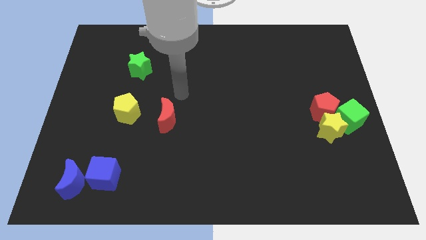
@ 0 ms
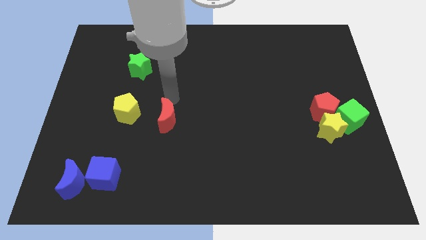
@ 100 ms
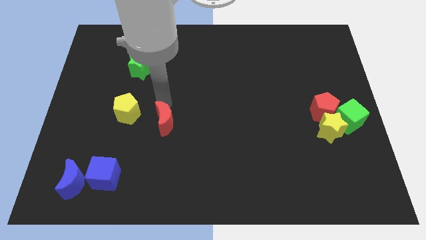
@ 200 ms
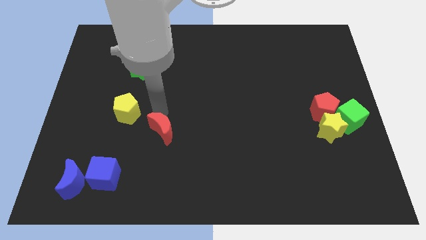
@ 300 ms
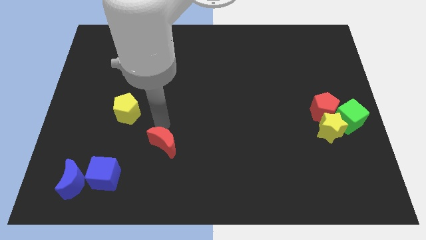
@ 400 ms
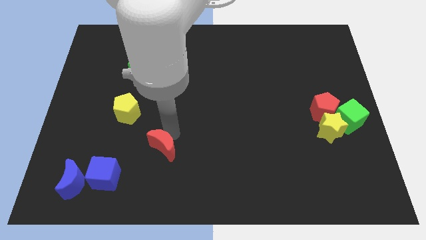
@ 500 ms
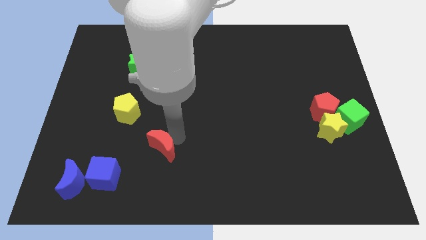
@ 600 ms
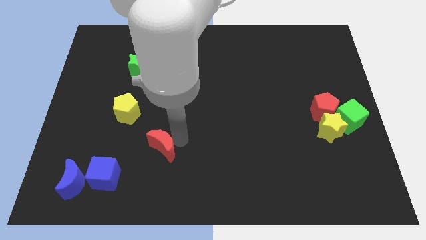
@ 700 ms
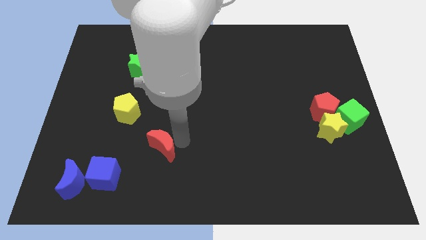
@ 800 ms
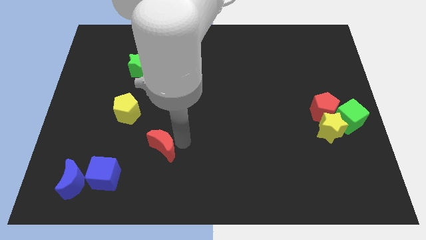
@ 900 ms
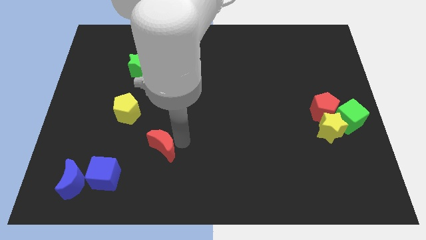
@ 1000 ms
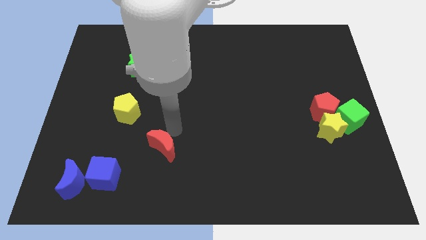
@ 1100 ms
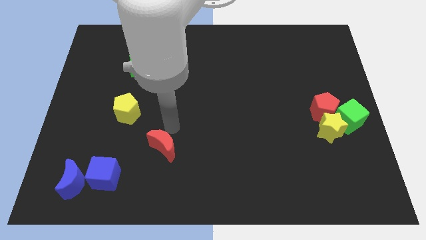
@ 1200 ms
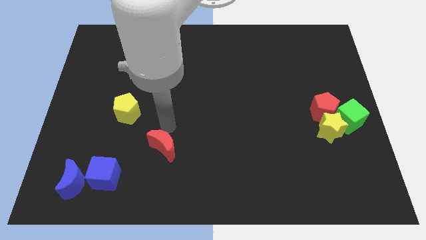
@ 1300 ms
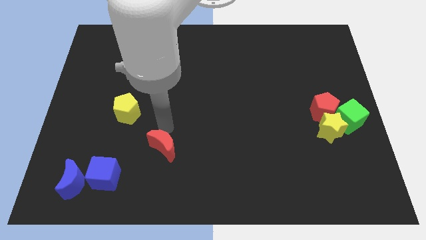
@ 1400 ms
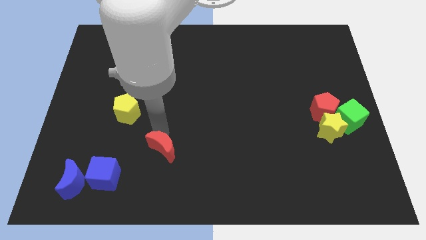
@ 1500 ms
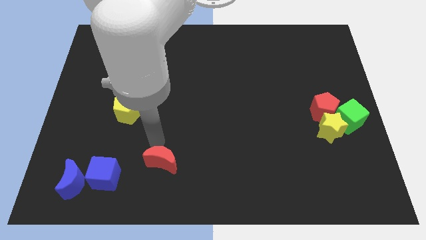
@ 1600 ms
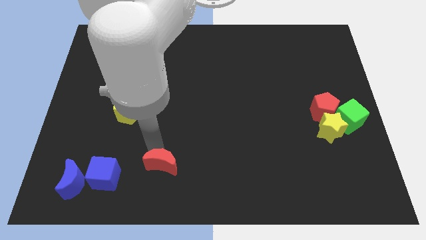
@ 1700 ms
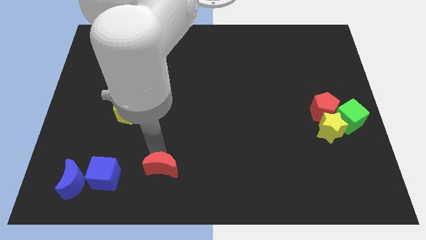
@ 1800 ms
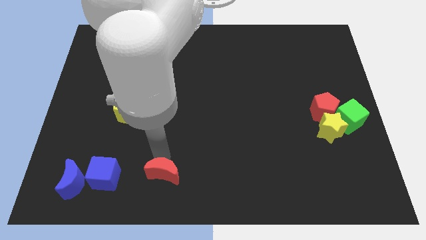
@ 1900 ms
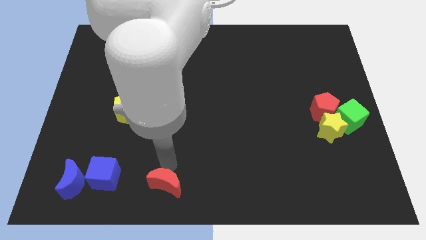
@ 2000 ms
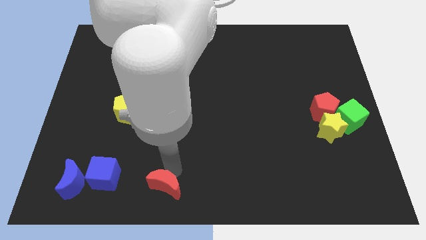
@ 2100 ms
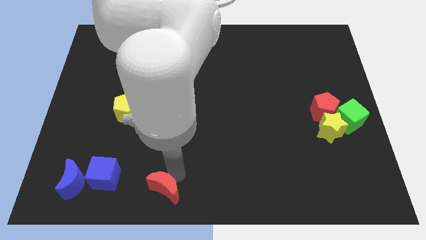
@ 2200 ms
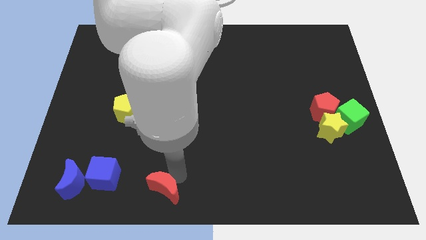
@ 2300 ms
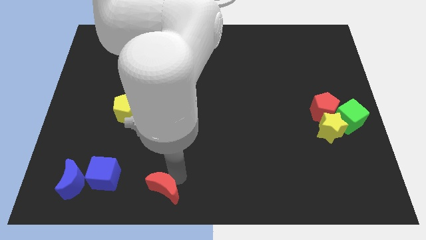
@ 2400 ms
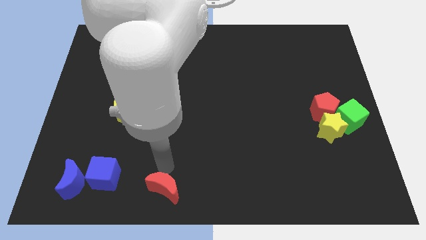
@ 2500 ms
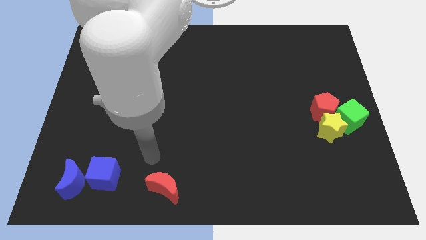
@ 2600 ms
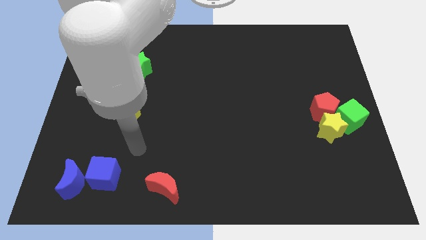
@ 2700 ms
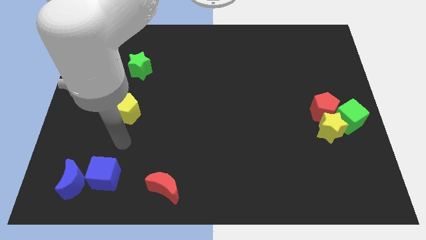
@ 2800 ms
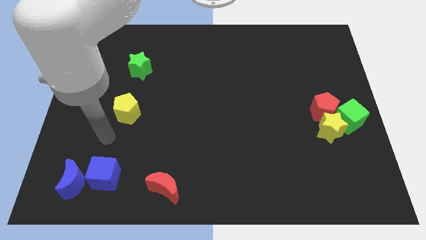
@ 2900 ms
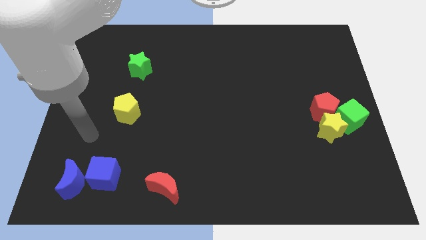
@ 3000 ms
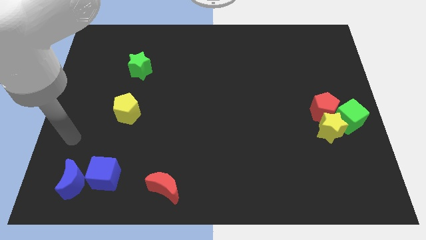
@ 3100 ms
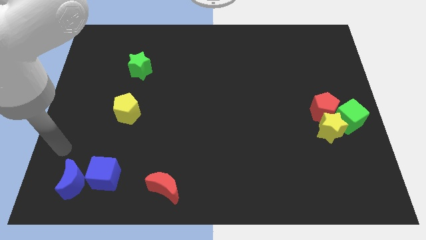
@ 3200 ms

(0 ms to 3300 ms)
place the red crescent right to the blue cube

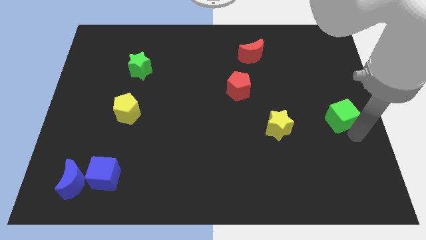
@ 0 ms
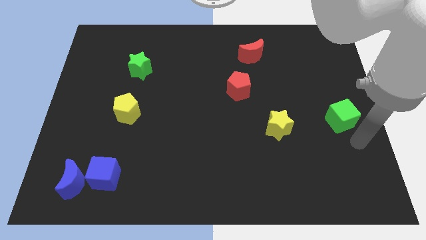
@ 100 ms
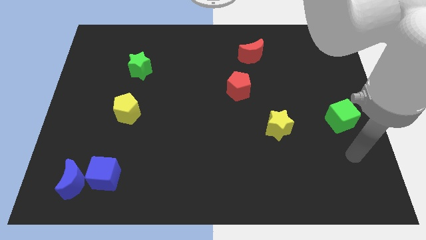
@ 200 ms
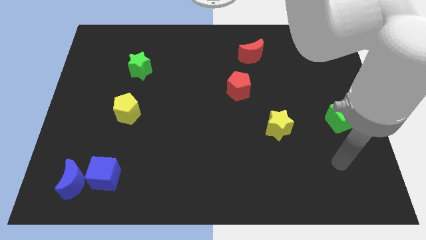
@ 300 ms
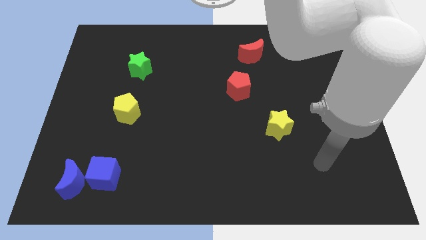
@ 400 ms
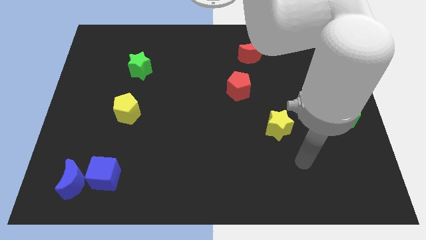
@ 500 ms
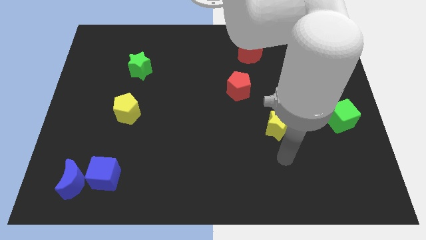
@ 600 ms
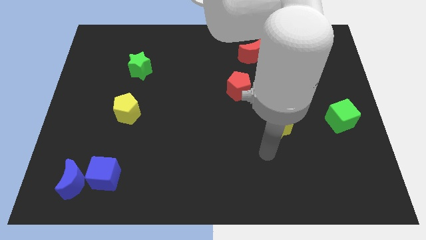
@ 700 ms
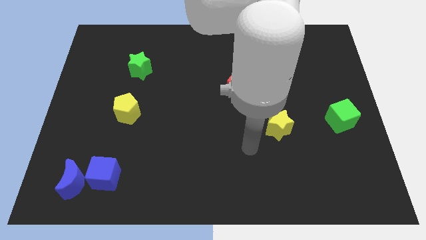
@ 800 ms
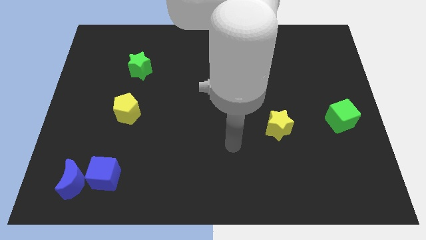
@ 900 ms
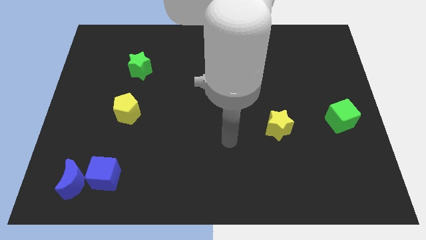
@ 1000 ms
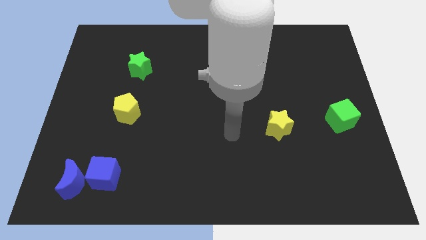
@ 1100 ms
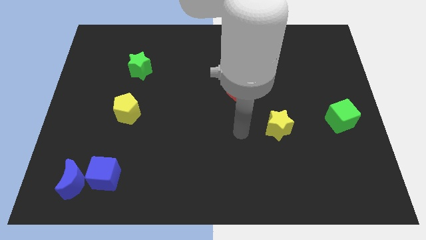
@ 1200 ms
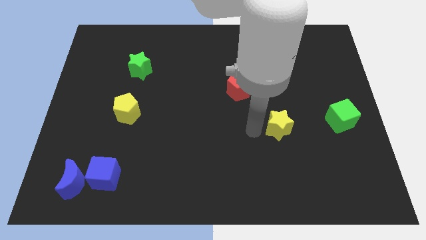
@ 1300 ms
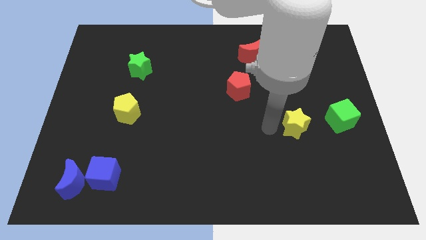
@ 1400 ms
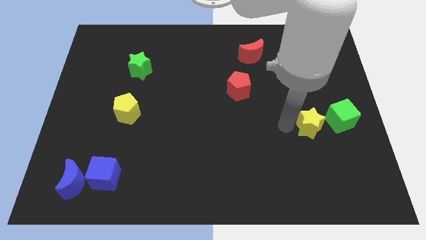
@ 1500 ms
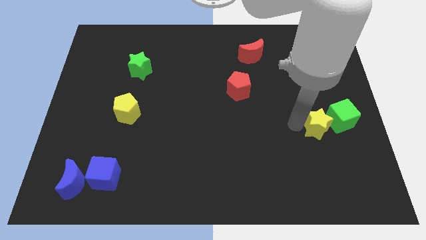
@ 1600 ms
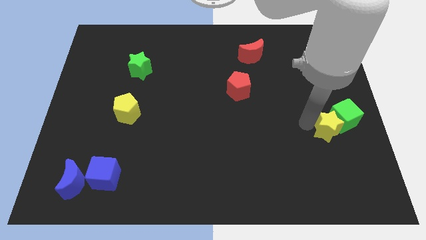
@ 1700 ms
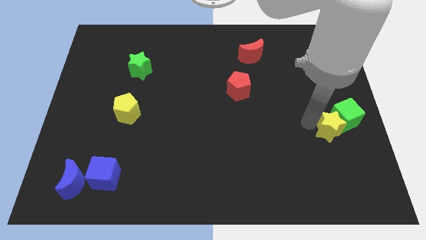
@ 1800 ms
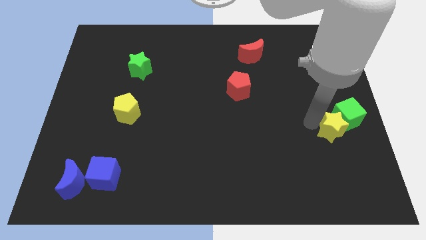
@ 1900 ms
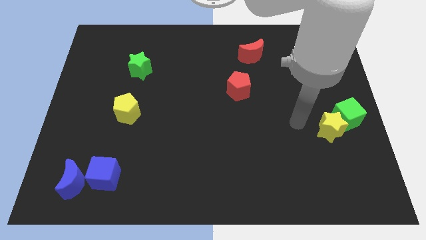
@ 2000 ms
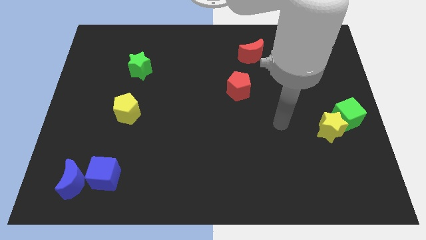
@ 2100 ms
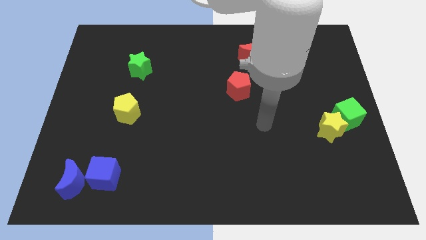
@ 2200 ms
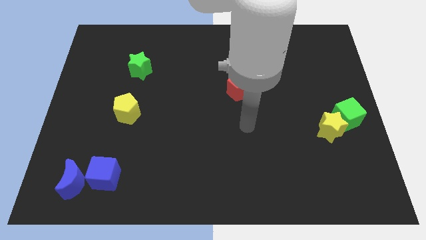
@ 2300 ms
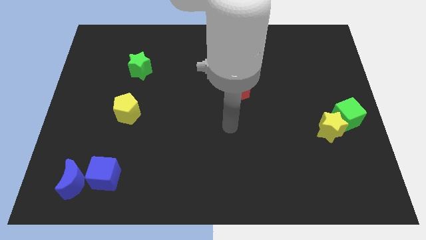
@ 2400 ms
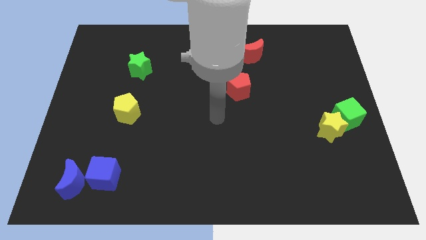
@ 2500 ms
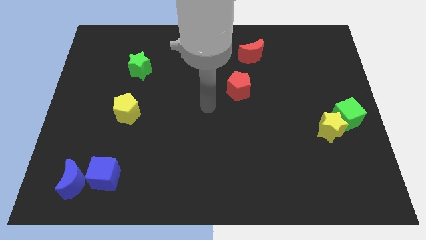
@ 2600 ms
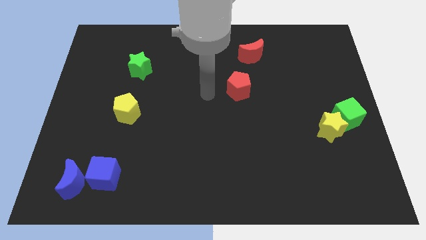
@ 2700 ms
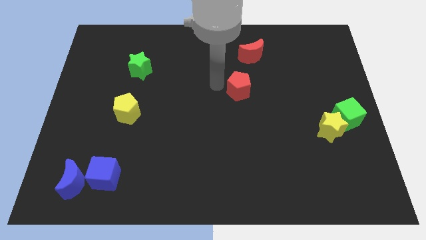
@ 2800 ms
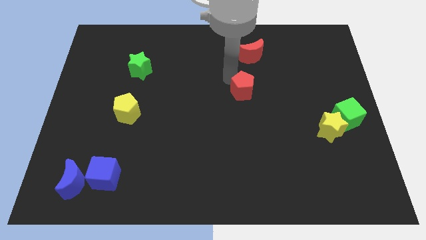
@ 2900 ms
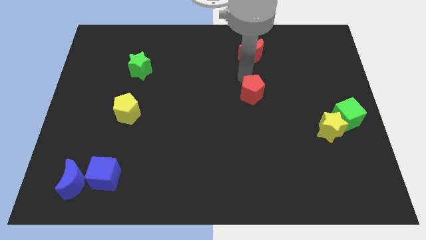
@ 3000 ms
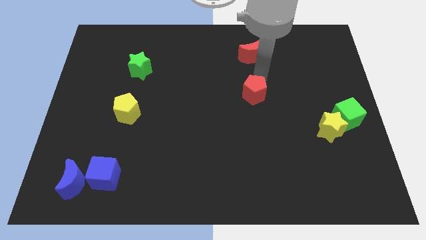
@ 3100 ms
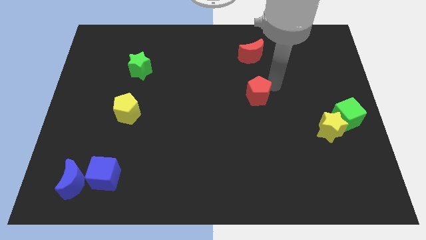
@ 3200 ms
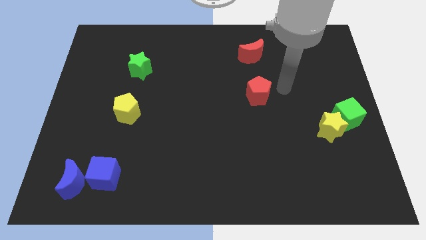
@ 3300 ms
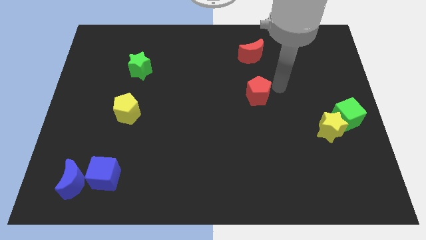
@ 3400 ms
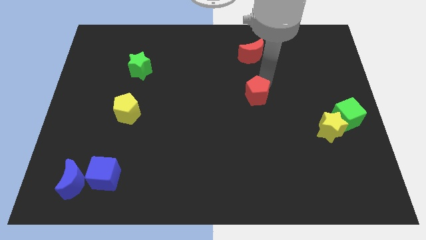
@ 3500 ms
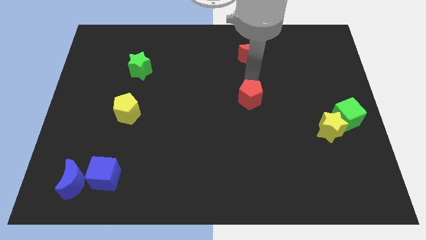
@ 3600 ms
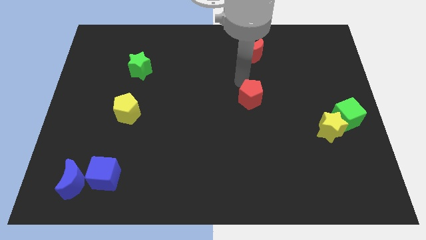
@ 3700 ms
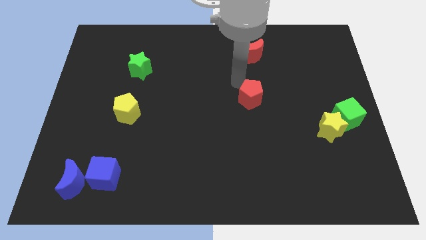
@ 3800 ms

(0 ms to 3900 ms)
push the yellow star into the green cube

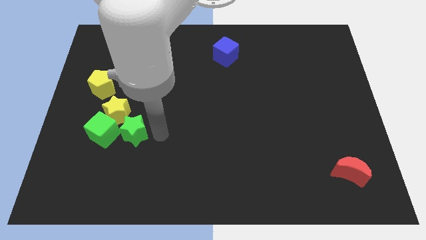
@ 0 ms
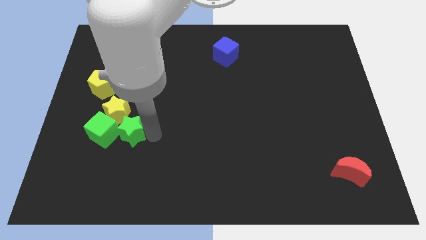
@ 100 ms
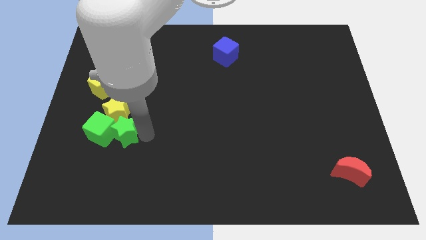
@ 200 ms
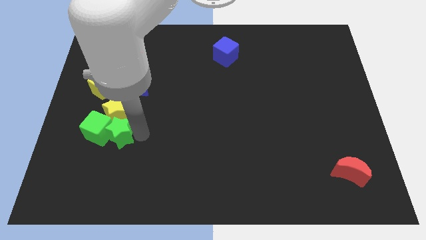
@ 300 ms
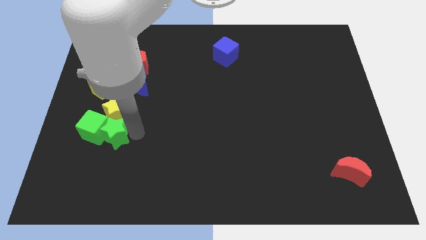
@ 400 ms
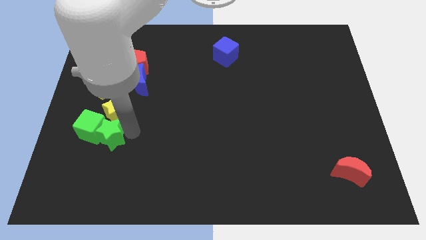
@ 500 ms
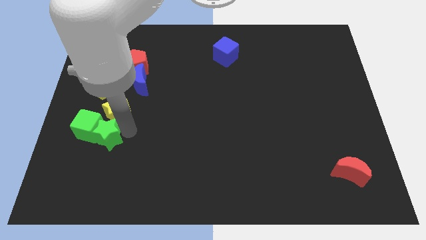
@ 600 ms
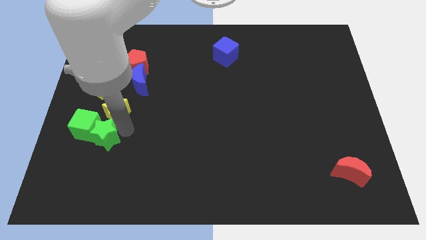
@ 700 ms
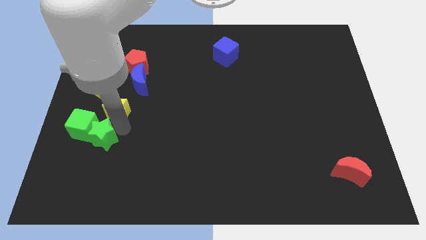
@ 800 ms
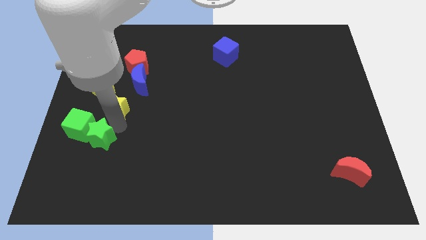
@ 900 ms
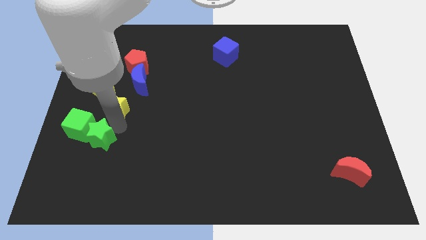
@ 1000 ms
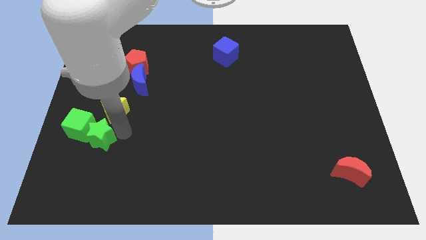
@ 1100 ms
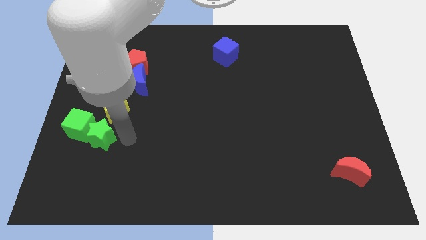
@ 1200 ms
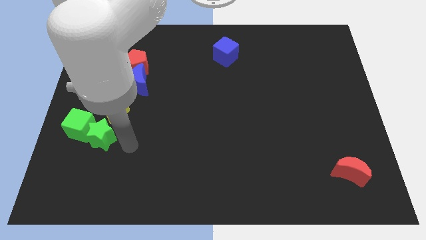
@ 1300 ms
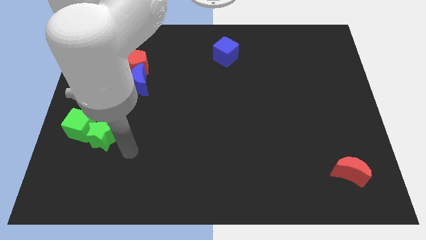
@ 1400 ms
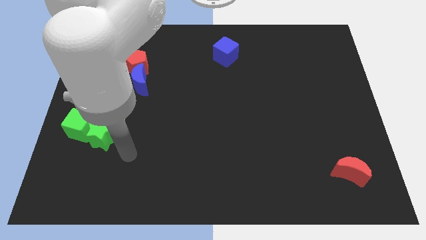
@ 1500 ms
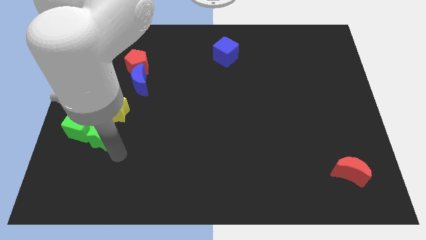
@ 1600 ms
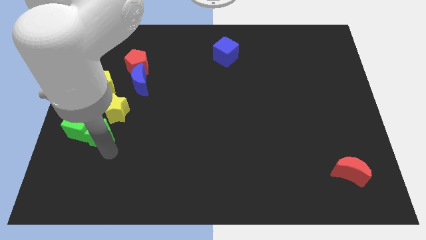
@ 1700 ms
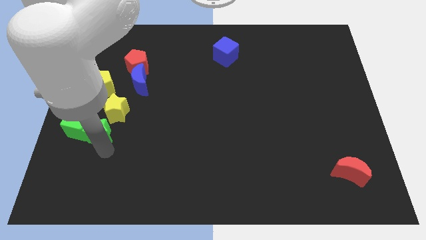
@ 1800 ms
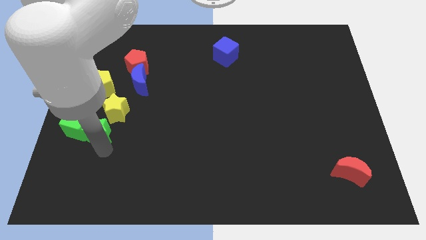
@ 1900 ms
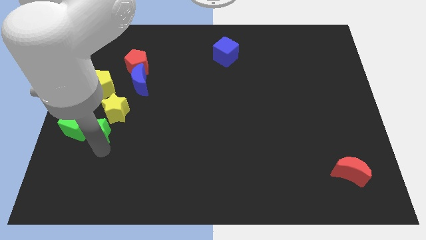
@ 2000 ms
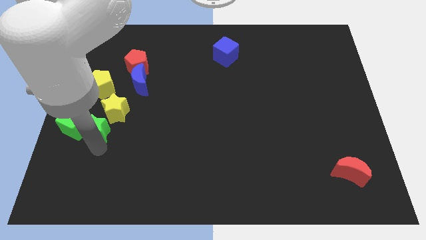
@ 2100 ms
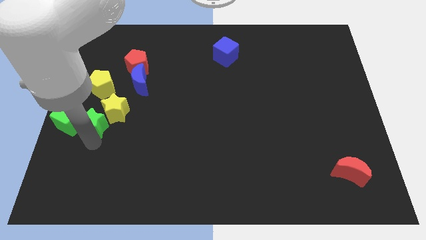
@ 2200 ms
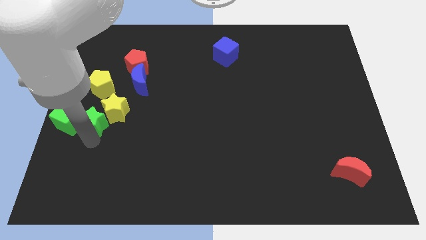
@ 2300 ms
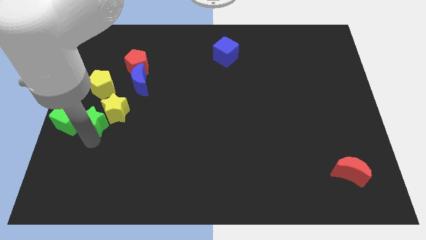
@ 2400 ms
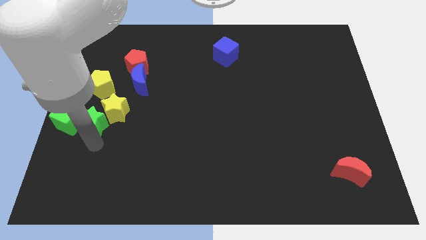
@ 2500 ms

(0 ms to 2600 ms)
push the green star into green cube
